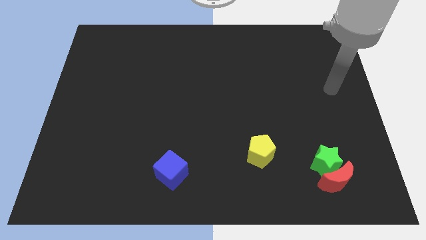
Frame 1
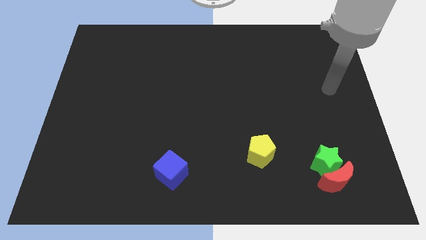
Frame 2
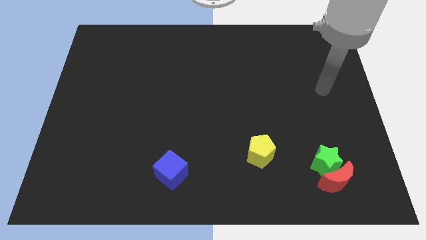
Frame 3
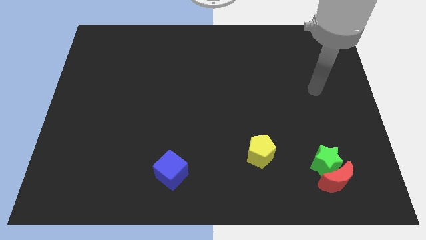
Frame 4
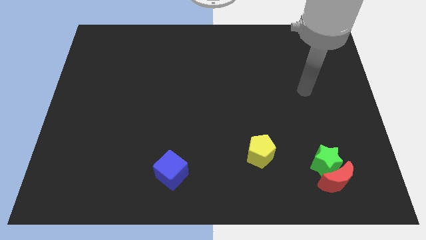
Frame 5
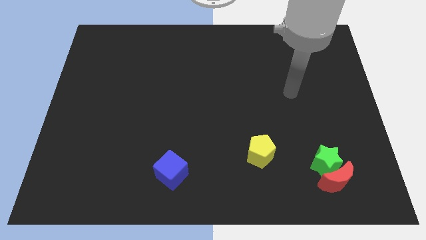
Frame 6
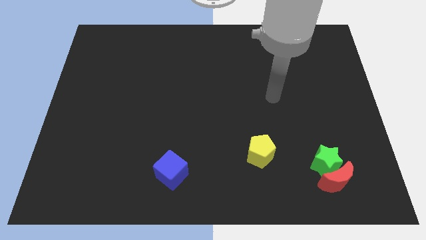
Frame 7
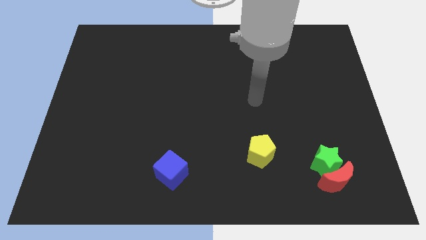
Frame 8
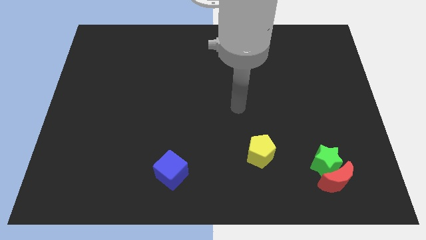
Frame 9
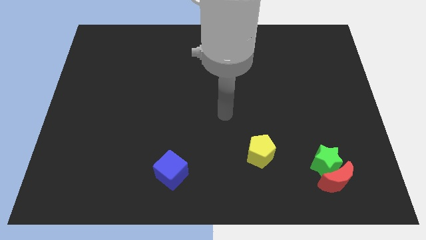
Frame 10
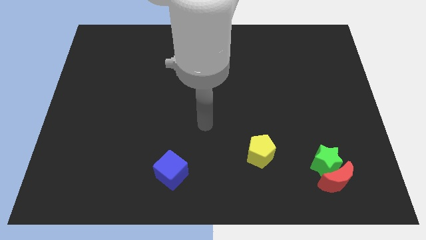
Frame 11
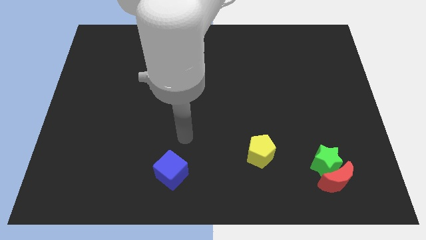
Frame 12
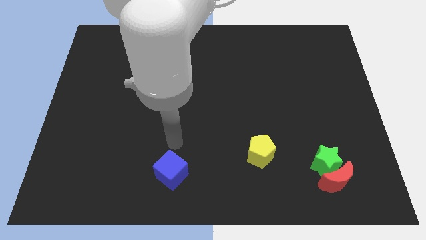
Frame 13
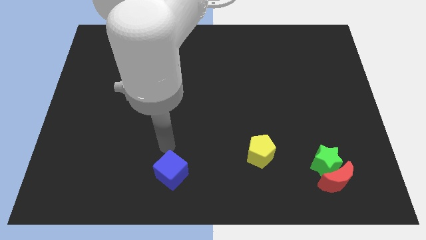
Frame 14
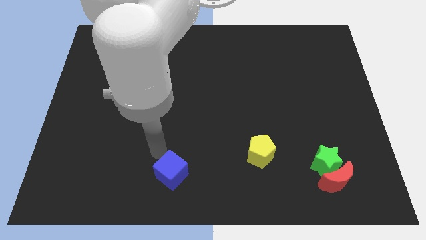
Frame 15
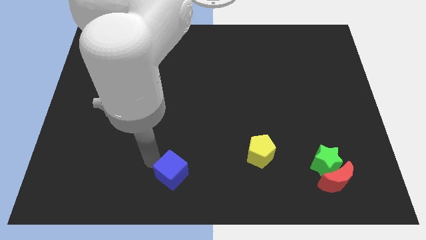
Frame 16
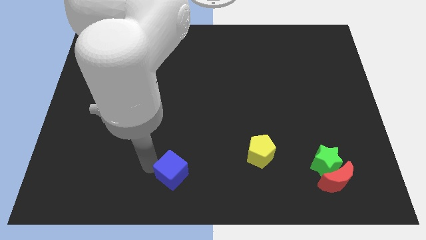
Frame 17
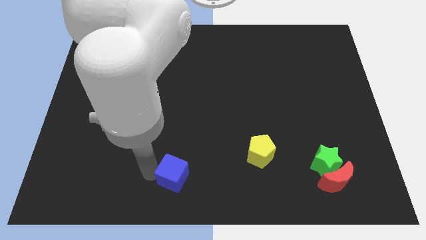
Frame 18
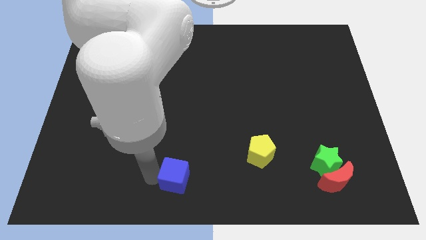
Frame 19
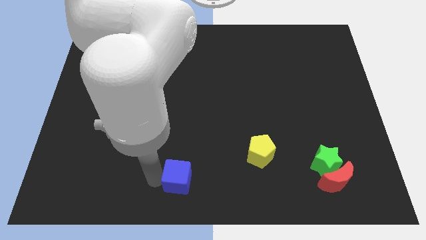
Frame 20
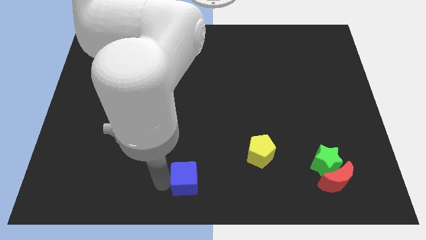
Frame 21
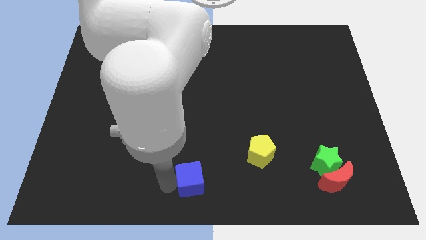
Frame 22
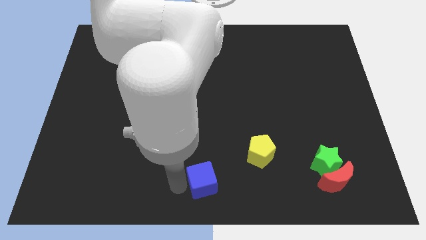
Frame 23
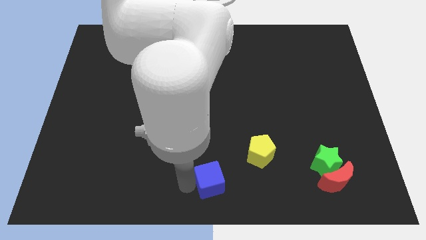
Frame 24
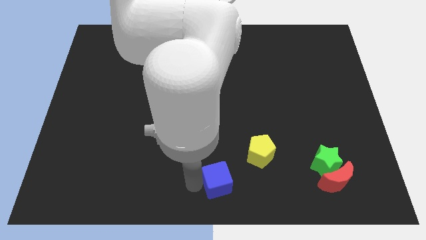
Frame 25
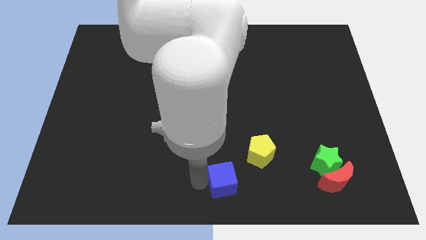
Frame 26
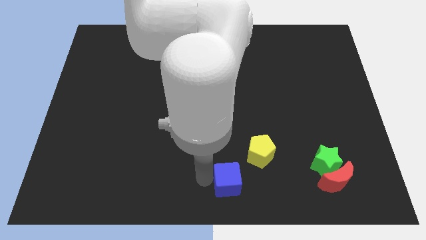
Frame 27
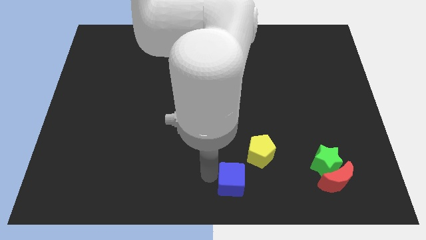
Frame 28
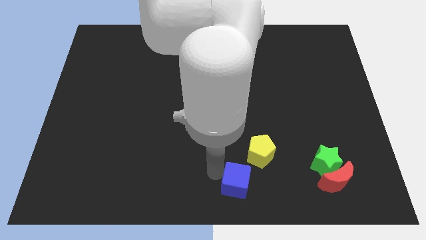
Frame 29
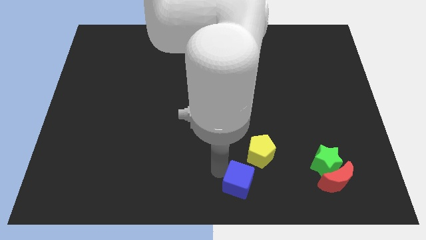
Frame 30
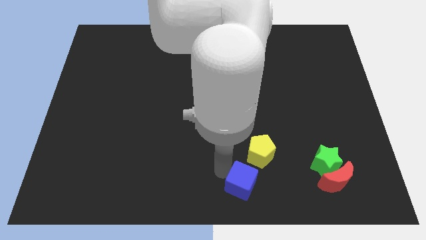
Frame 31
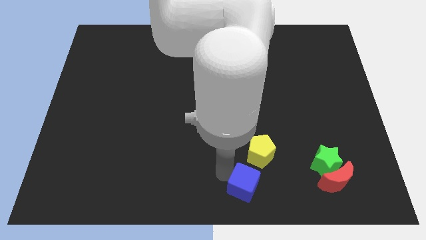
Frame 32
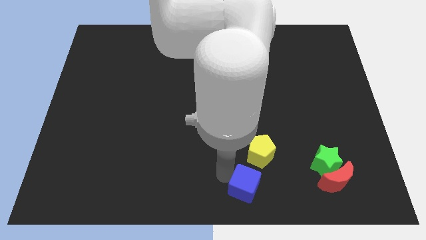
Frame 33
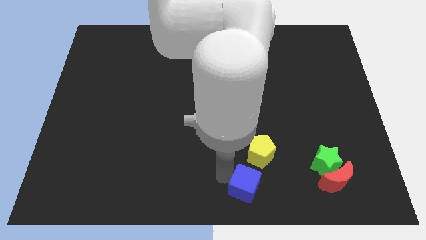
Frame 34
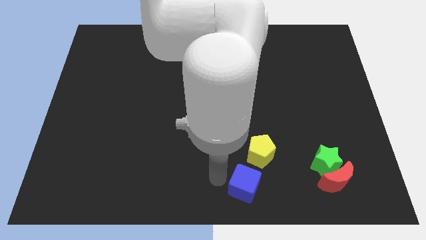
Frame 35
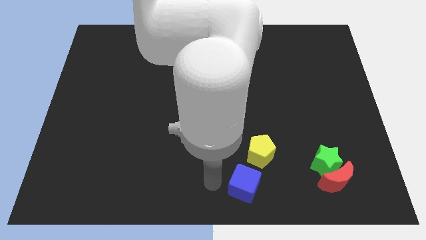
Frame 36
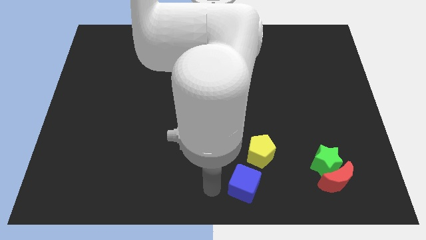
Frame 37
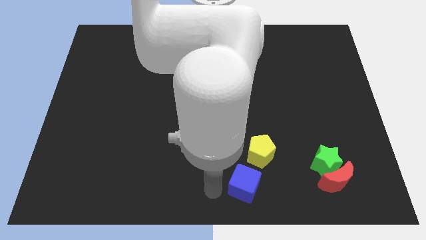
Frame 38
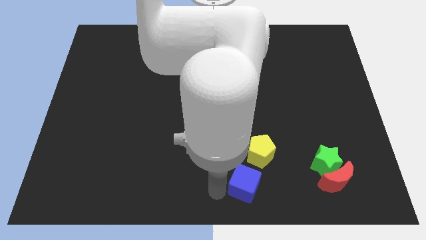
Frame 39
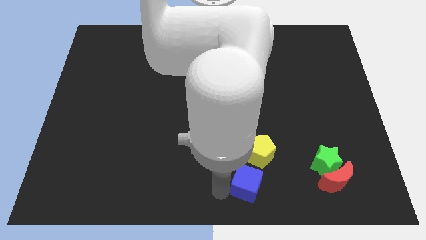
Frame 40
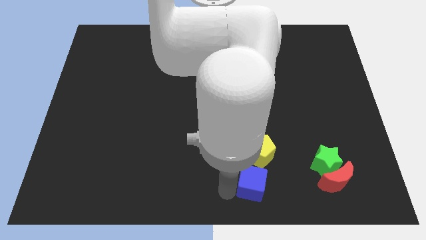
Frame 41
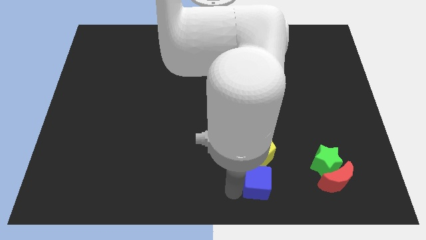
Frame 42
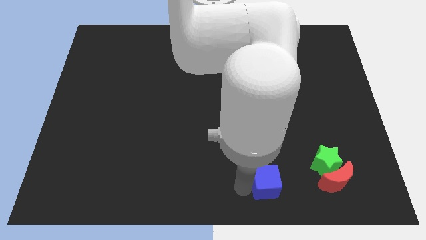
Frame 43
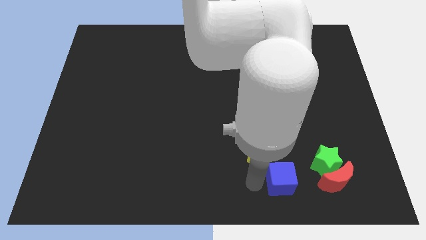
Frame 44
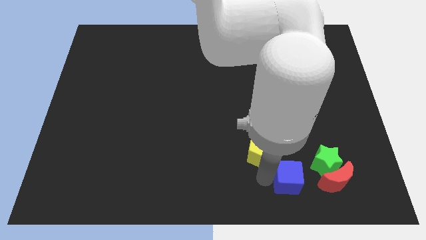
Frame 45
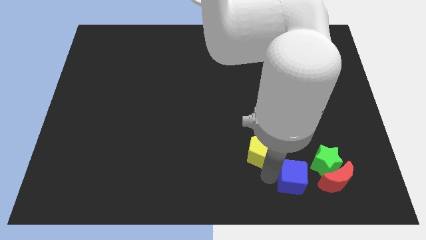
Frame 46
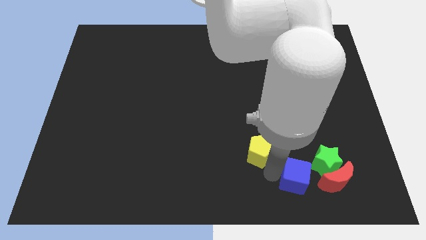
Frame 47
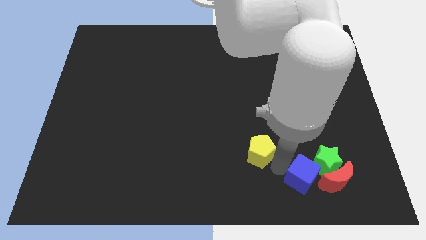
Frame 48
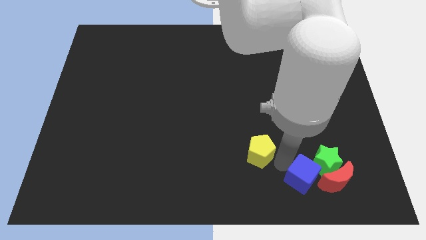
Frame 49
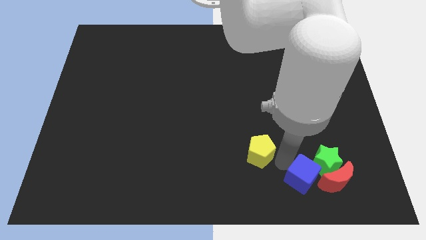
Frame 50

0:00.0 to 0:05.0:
slide the blue cube next to the green block

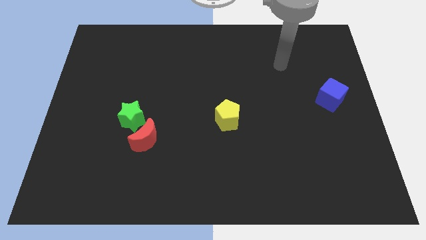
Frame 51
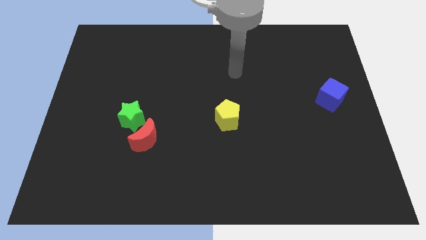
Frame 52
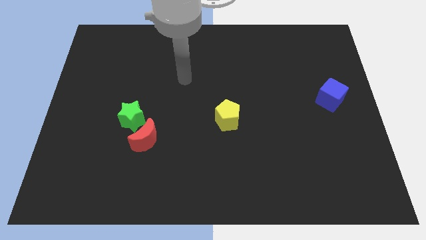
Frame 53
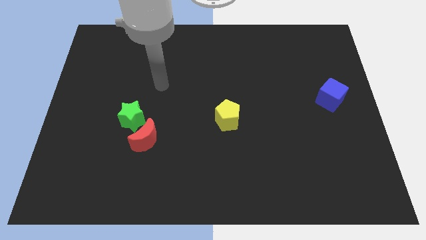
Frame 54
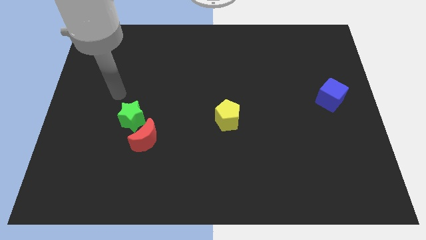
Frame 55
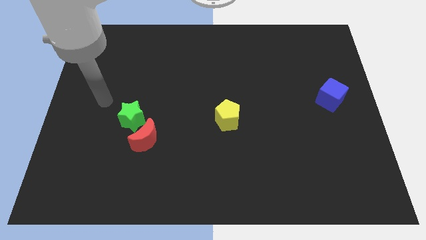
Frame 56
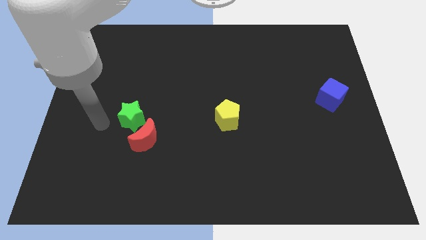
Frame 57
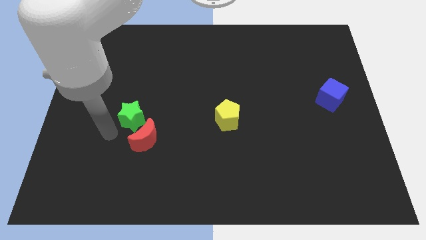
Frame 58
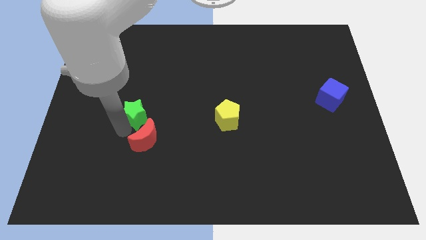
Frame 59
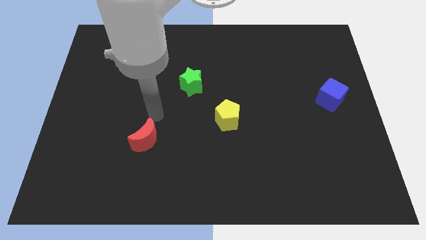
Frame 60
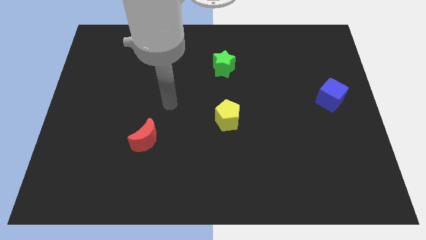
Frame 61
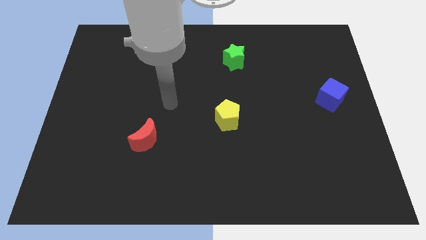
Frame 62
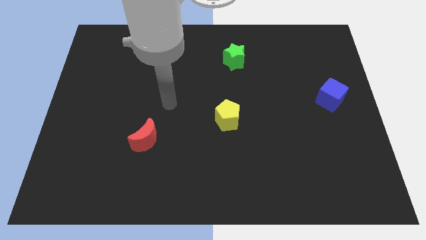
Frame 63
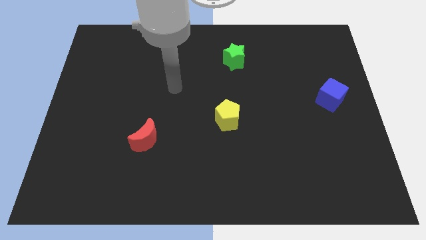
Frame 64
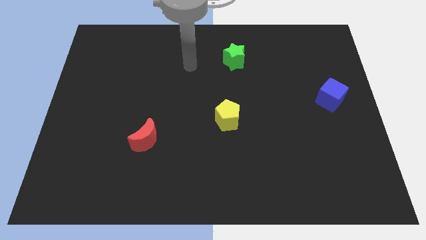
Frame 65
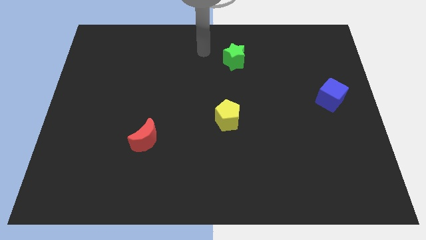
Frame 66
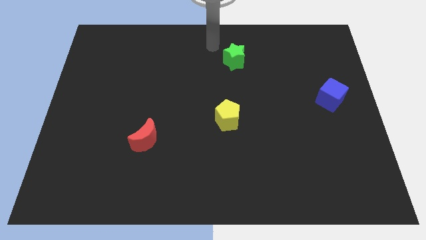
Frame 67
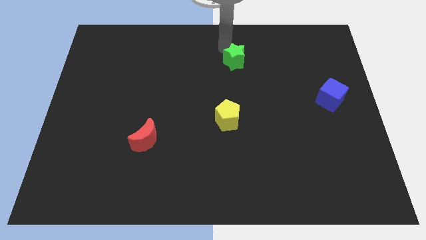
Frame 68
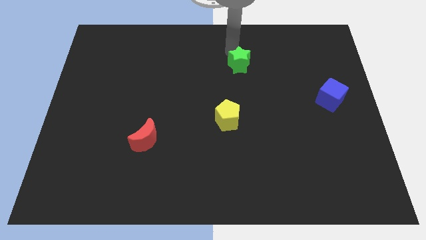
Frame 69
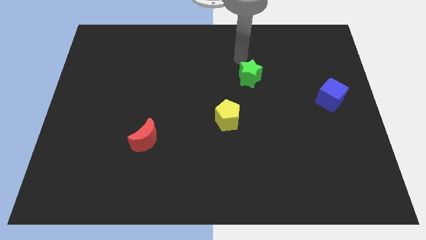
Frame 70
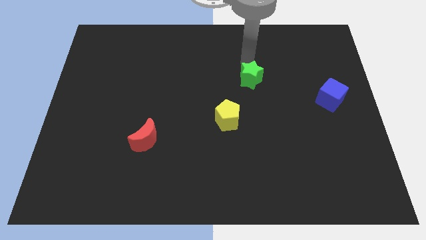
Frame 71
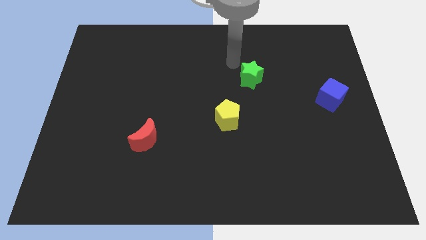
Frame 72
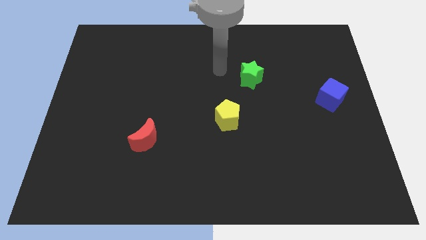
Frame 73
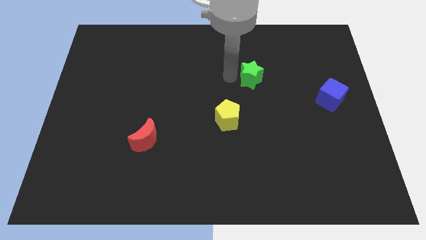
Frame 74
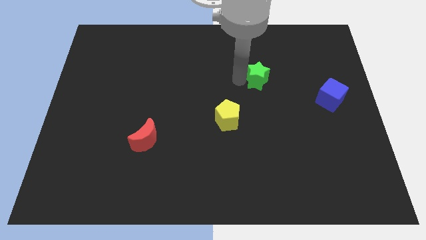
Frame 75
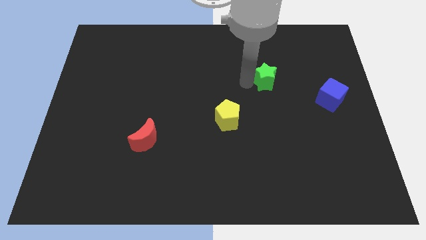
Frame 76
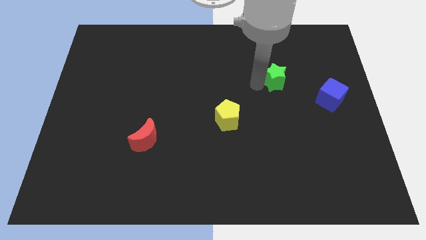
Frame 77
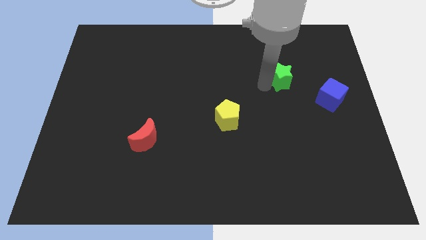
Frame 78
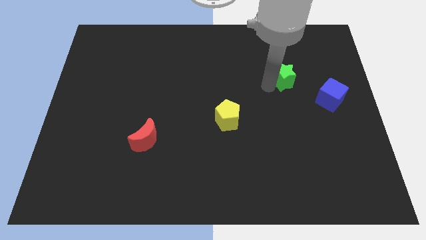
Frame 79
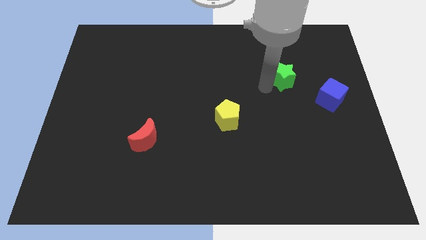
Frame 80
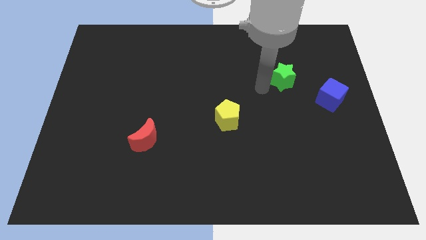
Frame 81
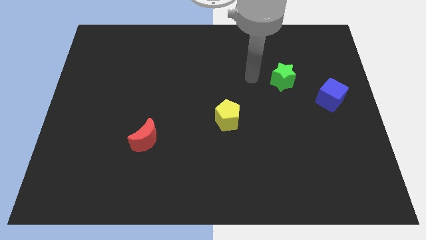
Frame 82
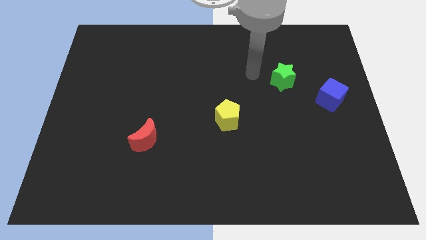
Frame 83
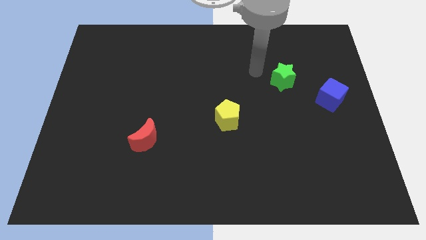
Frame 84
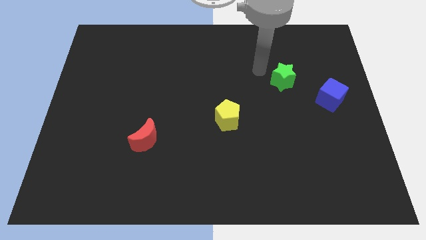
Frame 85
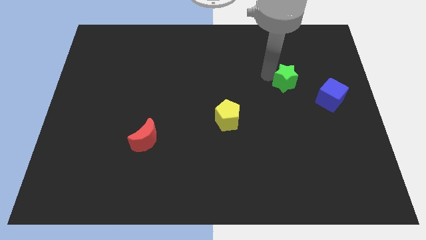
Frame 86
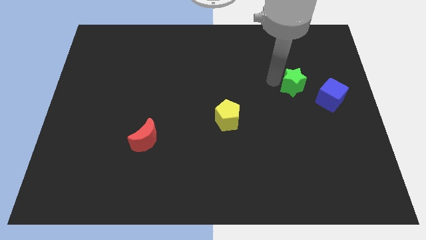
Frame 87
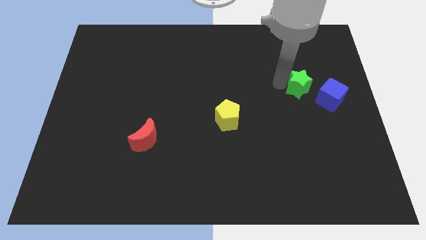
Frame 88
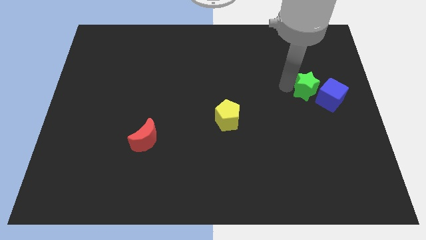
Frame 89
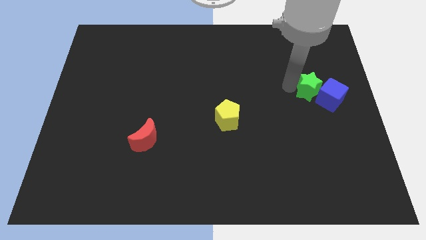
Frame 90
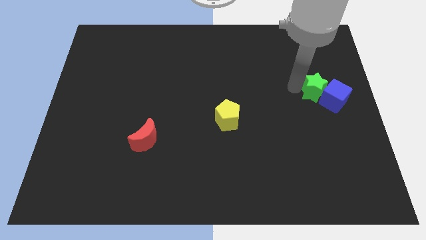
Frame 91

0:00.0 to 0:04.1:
move the green star to the blue cube
